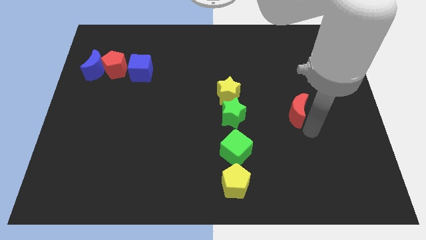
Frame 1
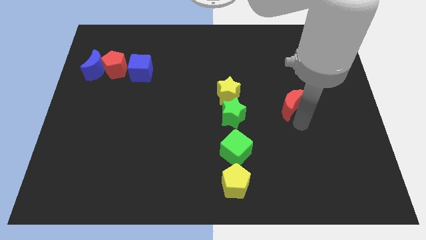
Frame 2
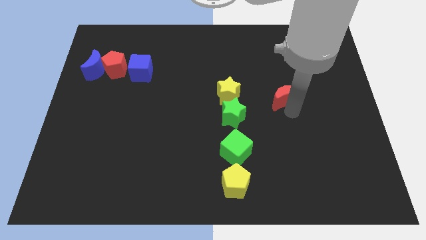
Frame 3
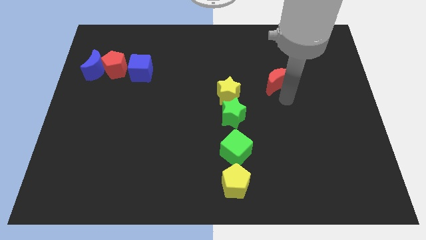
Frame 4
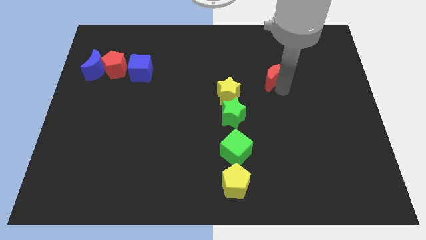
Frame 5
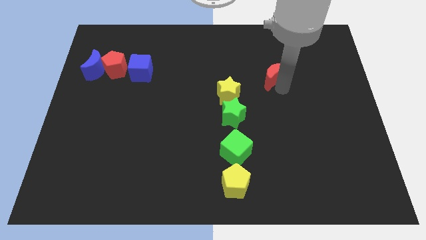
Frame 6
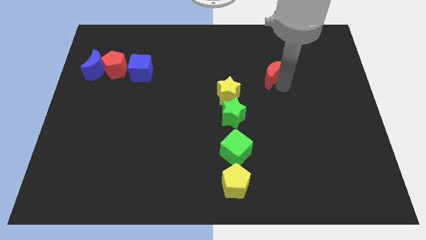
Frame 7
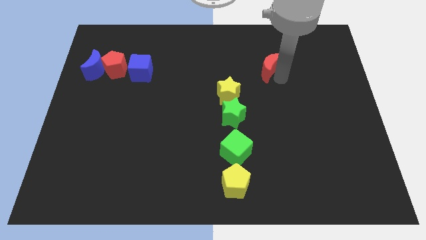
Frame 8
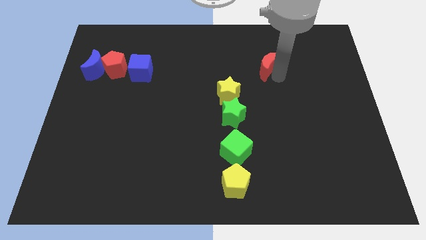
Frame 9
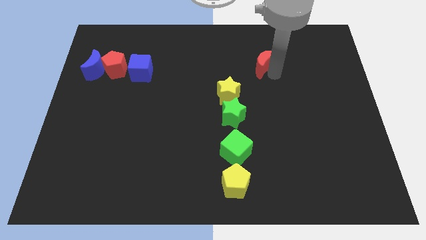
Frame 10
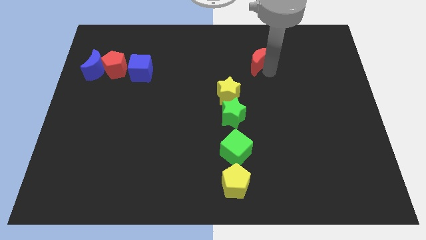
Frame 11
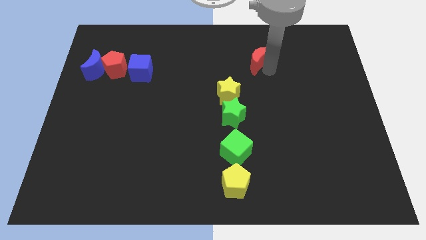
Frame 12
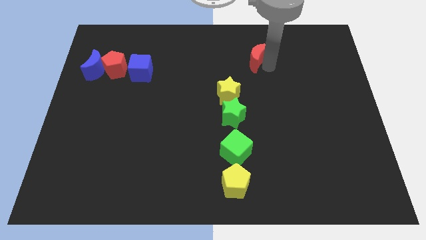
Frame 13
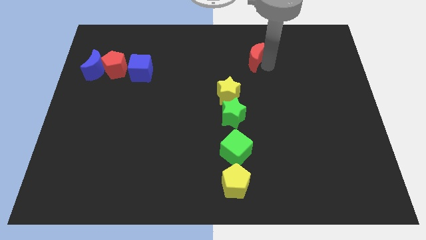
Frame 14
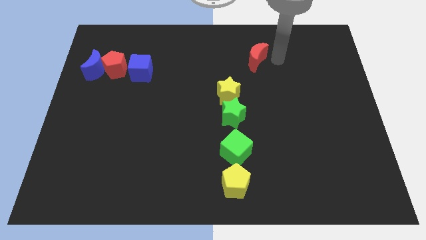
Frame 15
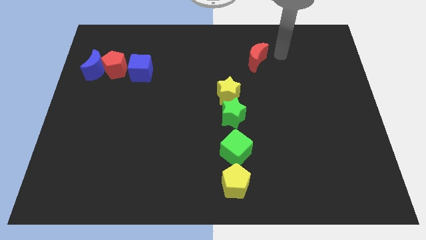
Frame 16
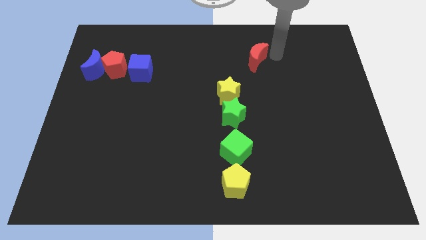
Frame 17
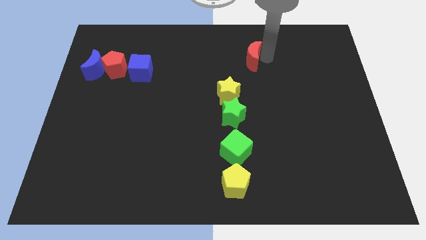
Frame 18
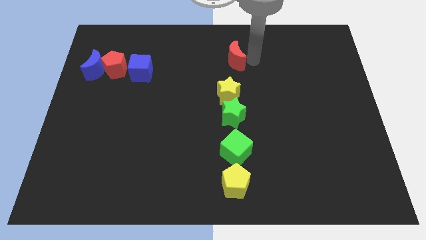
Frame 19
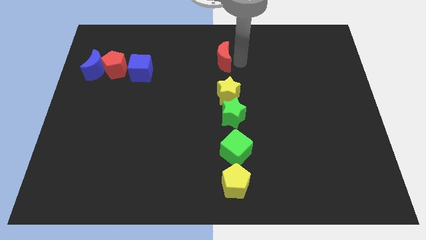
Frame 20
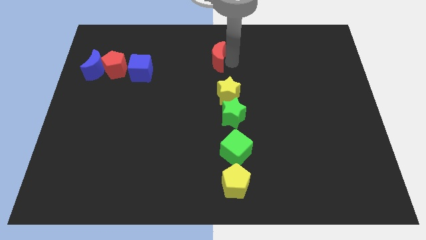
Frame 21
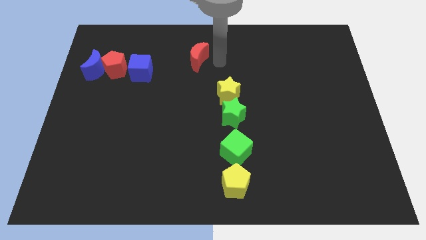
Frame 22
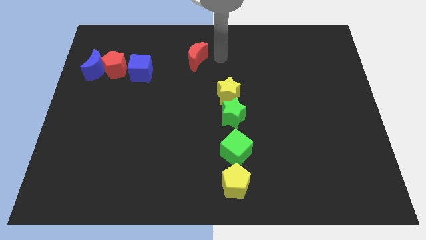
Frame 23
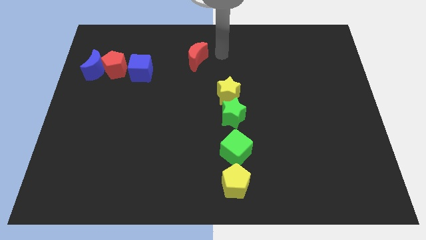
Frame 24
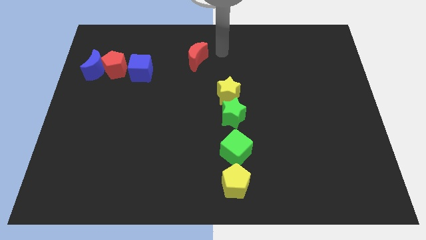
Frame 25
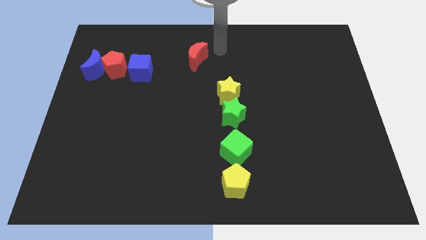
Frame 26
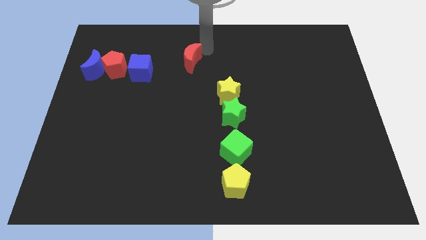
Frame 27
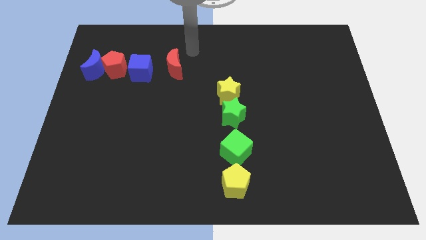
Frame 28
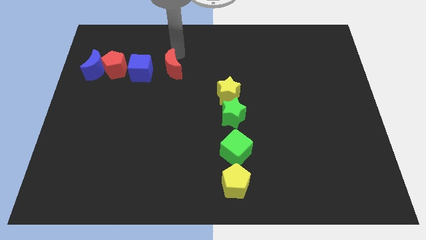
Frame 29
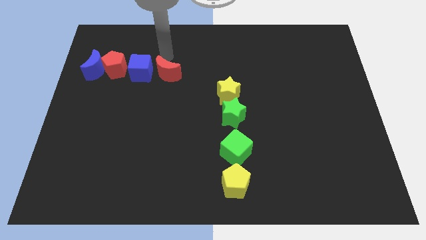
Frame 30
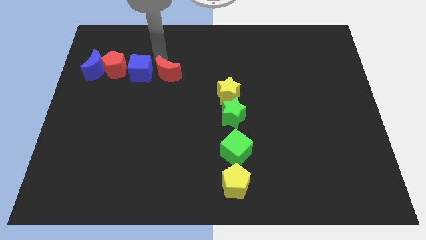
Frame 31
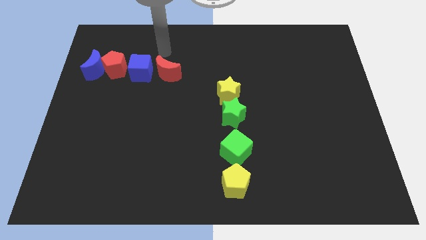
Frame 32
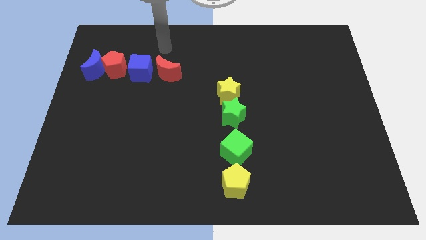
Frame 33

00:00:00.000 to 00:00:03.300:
move the red crescent to the right side of the blue cube

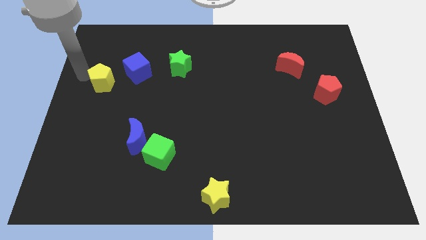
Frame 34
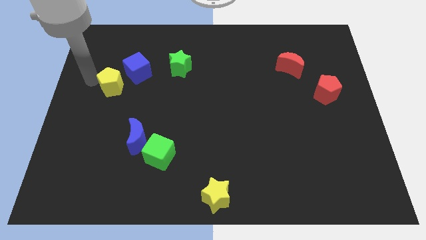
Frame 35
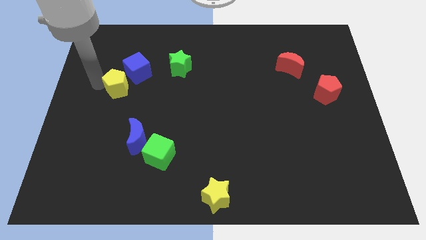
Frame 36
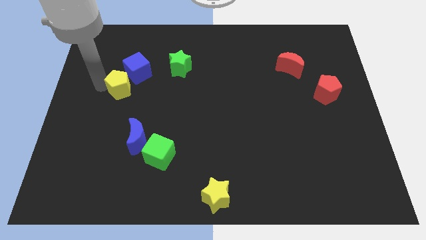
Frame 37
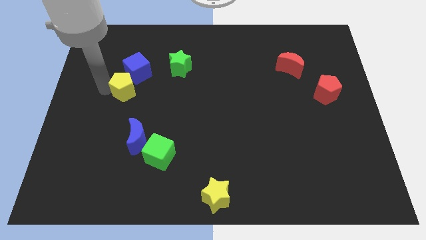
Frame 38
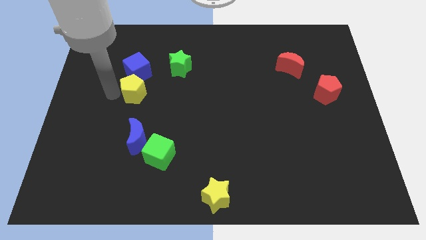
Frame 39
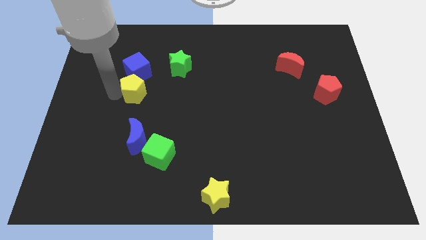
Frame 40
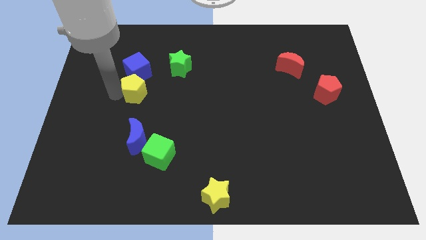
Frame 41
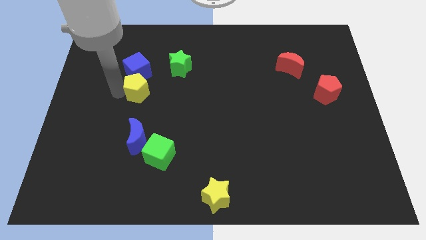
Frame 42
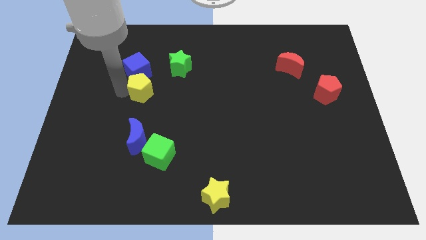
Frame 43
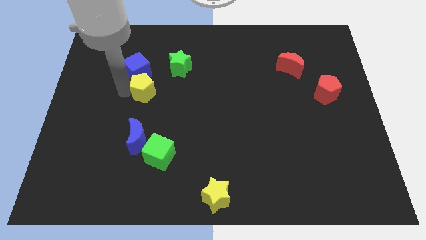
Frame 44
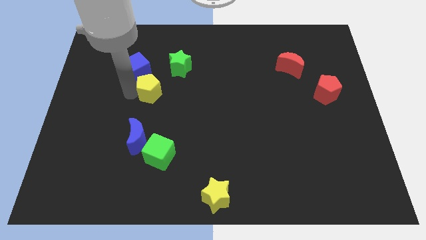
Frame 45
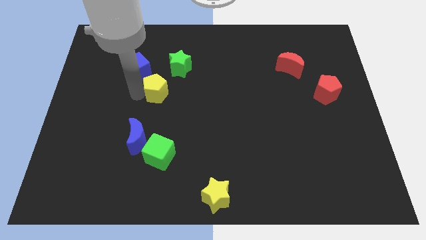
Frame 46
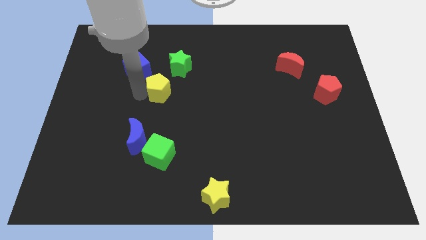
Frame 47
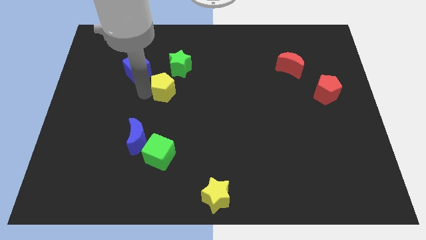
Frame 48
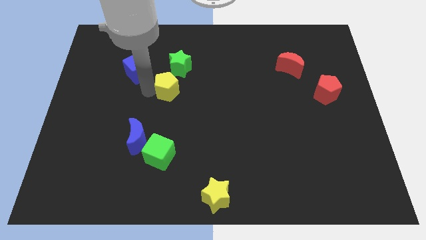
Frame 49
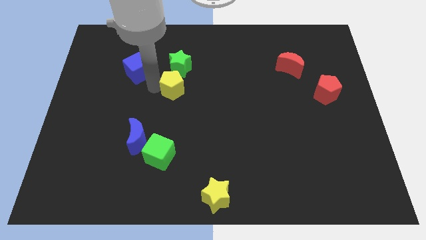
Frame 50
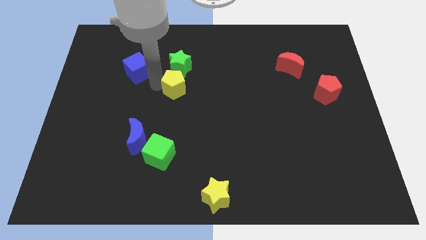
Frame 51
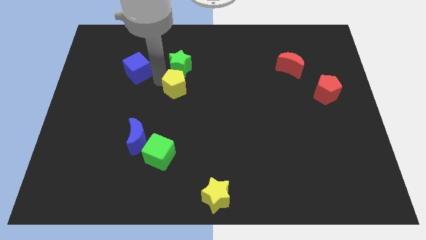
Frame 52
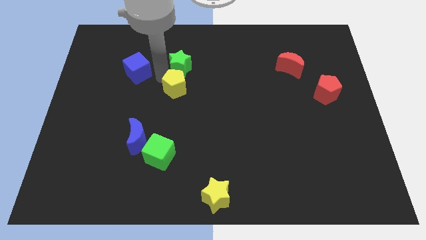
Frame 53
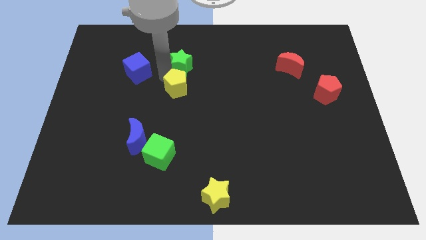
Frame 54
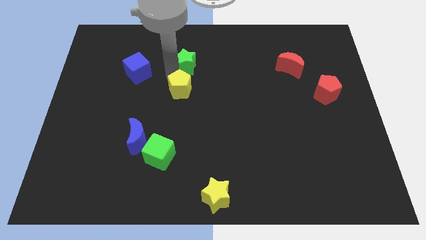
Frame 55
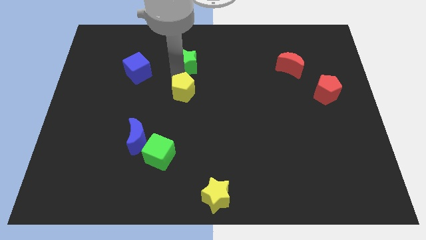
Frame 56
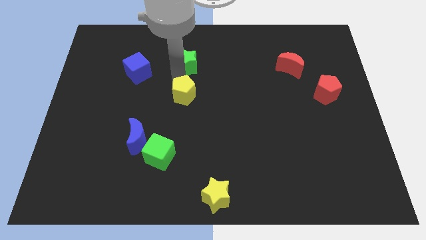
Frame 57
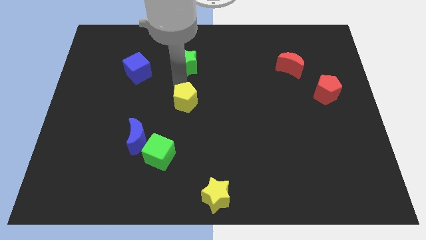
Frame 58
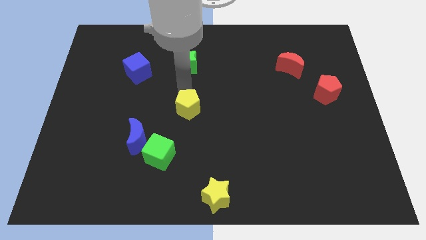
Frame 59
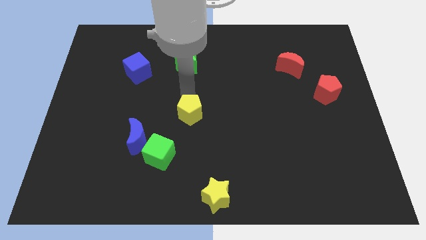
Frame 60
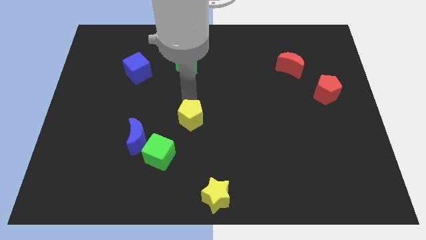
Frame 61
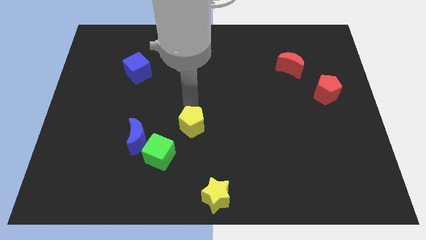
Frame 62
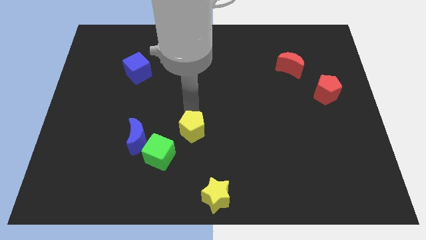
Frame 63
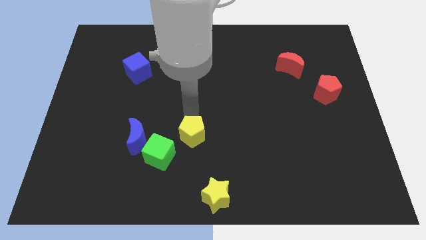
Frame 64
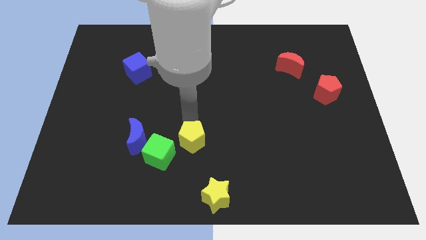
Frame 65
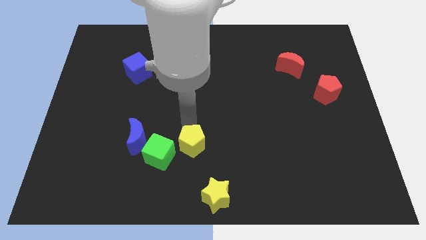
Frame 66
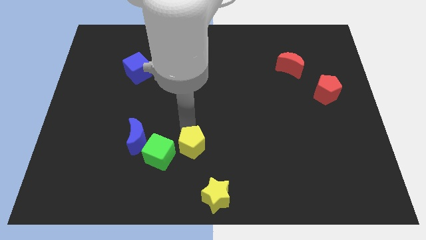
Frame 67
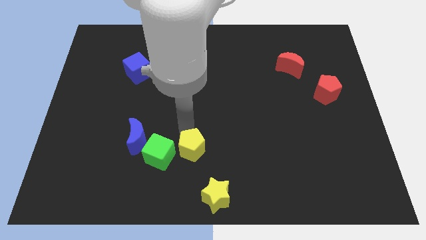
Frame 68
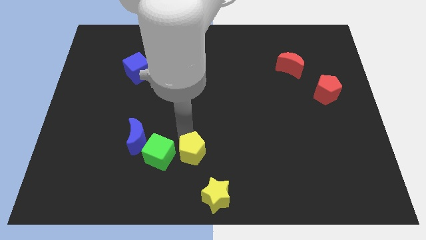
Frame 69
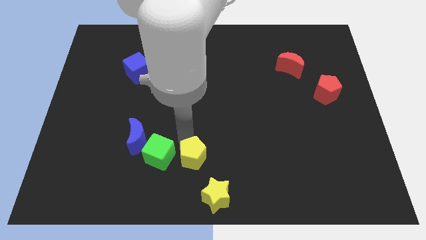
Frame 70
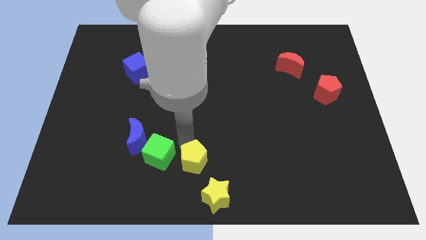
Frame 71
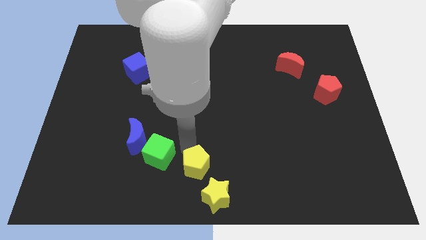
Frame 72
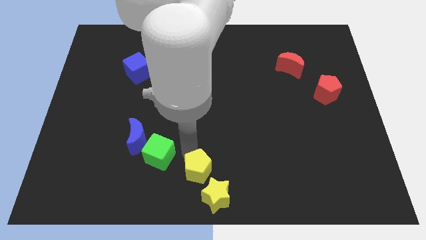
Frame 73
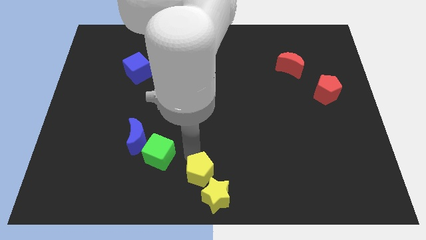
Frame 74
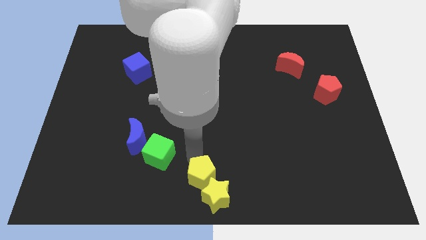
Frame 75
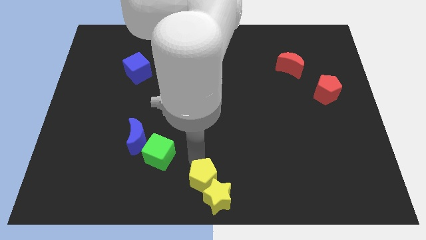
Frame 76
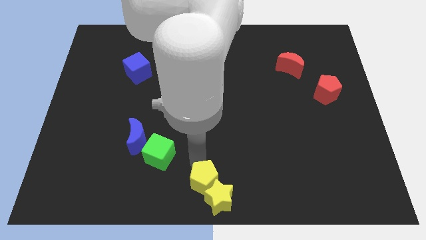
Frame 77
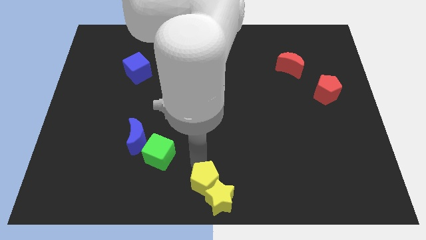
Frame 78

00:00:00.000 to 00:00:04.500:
place the yellow pentagon top left to yellow star

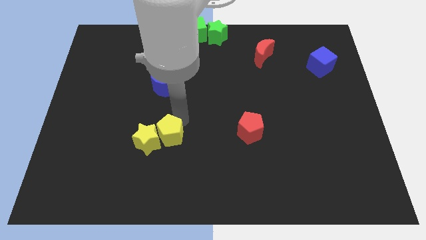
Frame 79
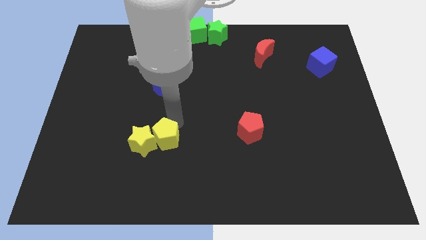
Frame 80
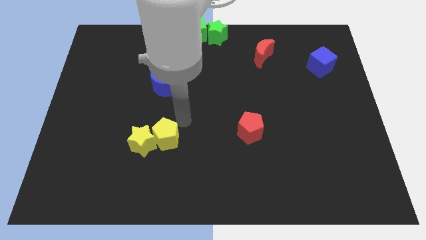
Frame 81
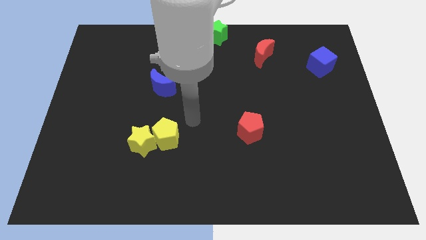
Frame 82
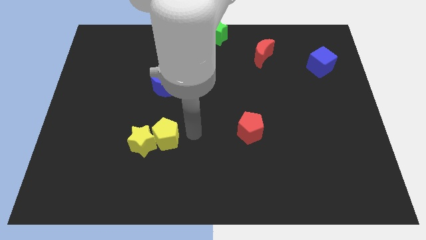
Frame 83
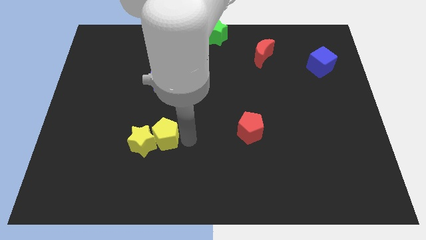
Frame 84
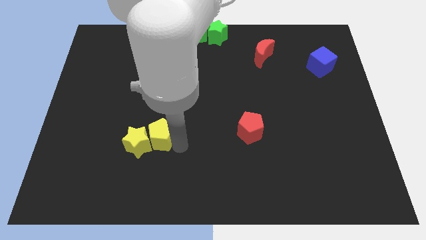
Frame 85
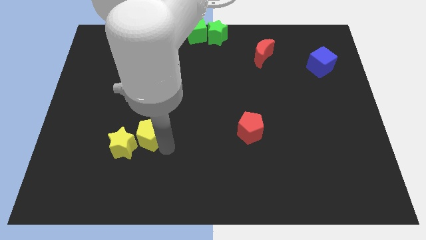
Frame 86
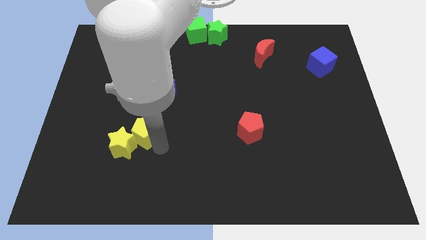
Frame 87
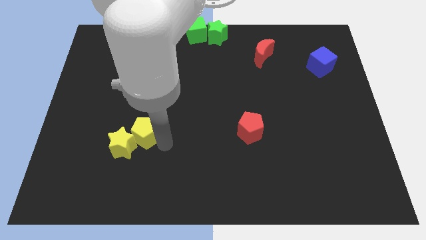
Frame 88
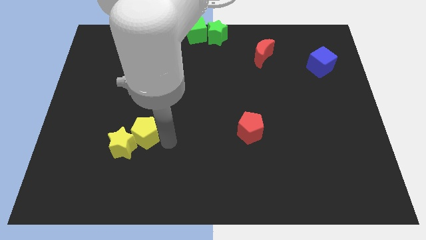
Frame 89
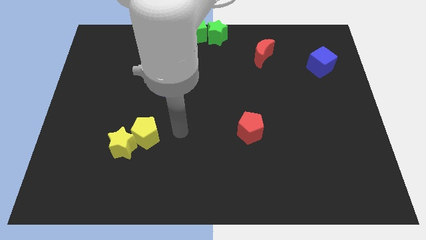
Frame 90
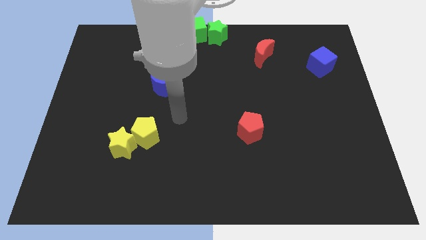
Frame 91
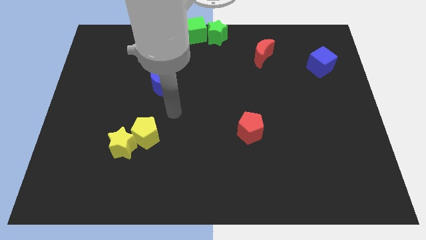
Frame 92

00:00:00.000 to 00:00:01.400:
move the yellow pentagon into the yellow star
